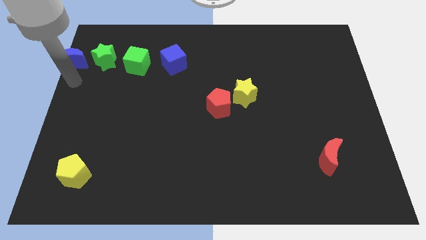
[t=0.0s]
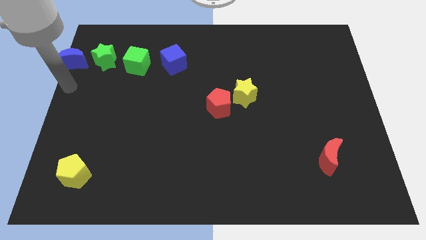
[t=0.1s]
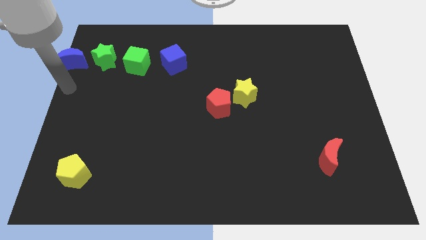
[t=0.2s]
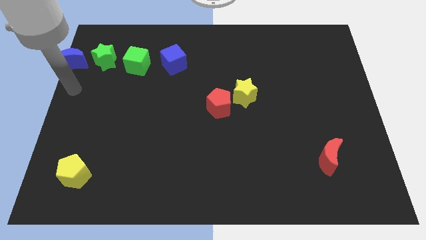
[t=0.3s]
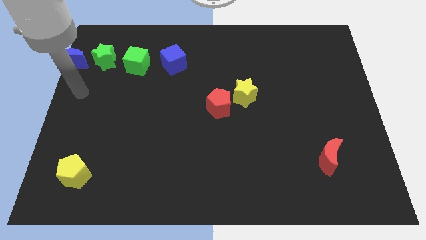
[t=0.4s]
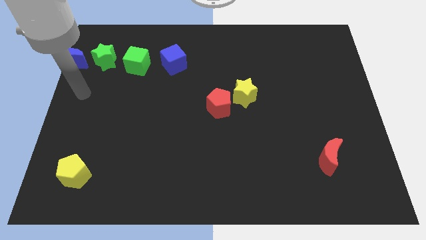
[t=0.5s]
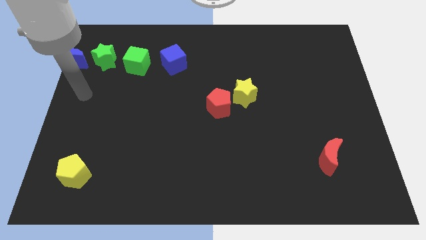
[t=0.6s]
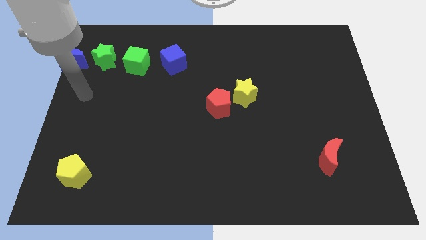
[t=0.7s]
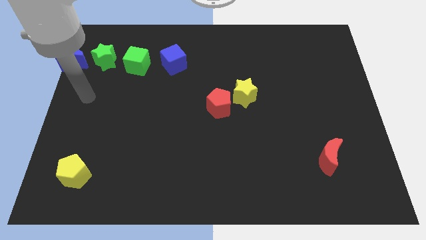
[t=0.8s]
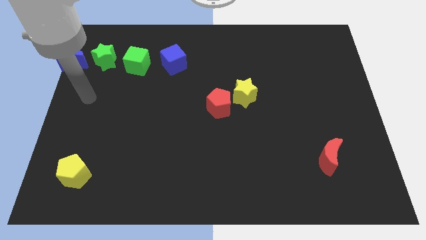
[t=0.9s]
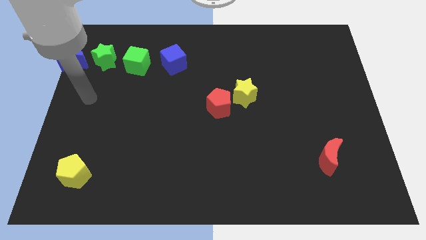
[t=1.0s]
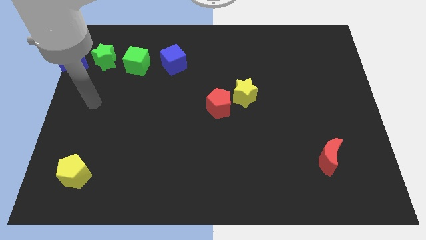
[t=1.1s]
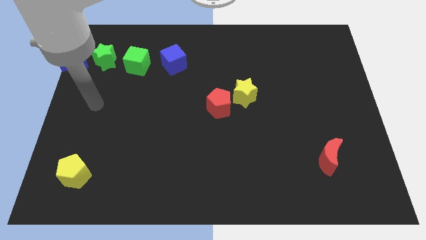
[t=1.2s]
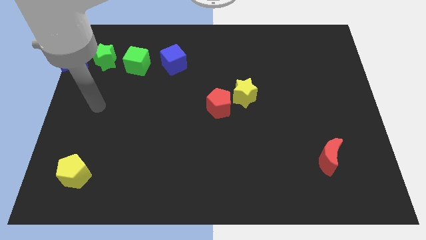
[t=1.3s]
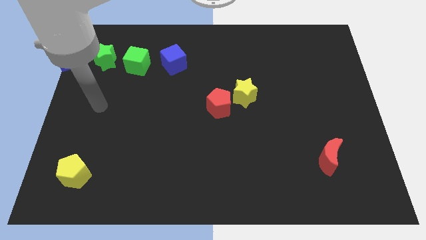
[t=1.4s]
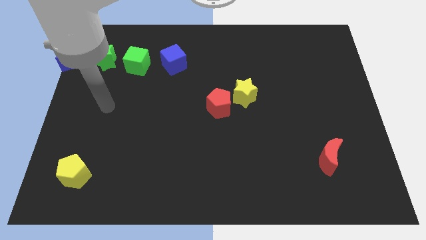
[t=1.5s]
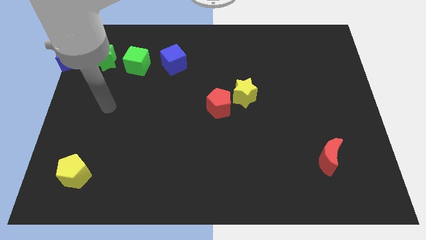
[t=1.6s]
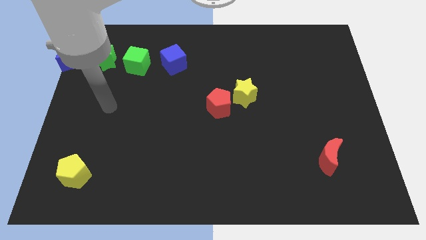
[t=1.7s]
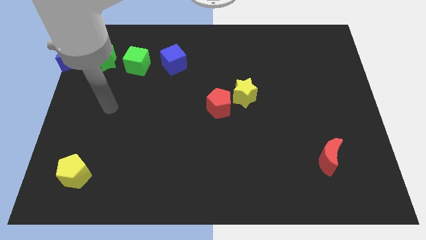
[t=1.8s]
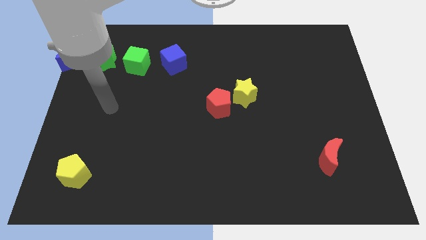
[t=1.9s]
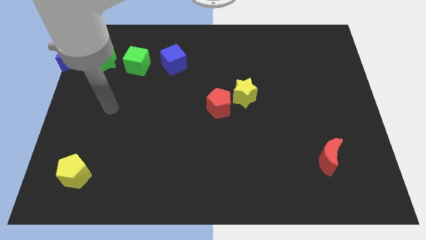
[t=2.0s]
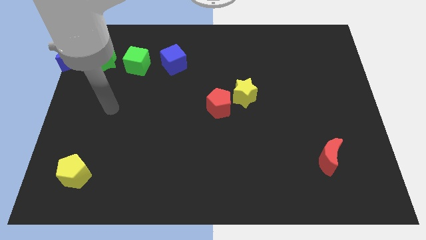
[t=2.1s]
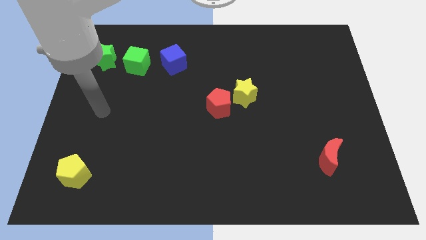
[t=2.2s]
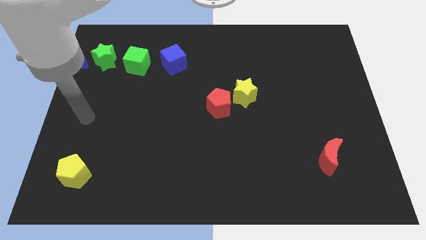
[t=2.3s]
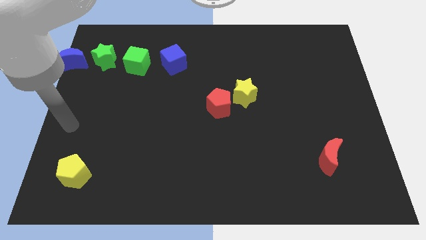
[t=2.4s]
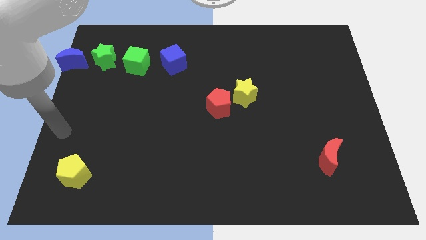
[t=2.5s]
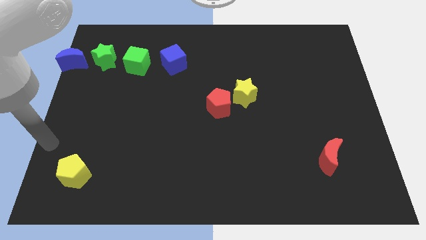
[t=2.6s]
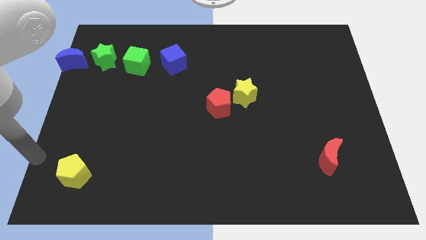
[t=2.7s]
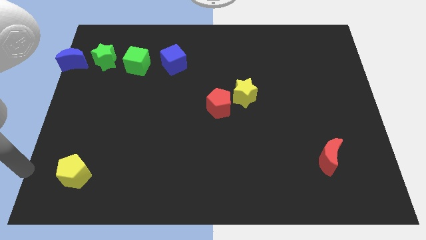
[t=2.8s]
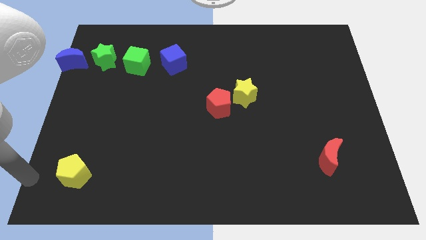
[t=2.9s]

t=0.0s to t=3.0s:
move your arm towards the yellow pentagon

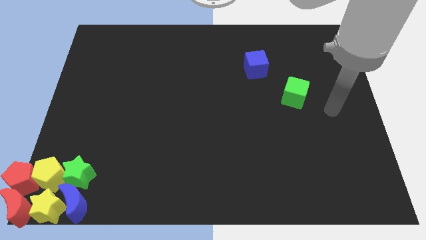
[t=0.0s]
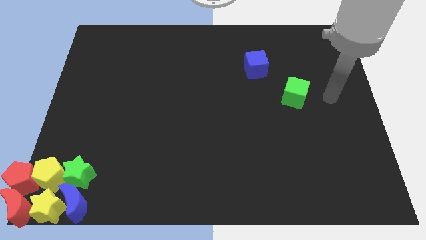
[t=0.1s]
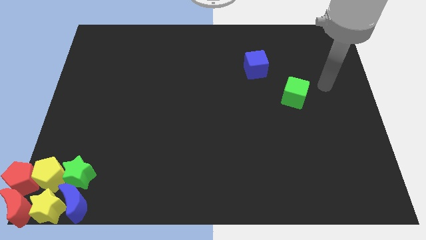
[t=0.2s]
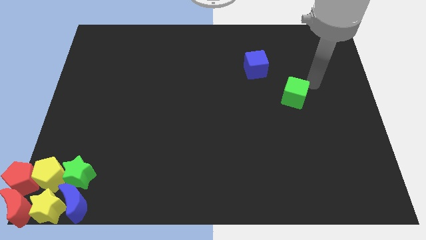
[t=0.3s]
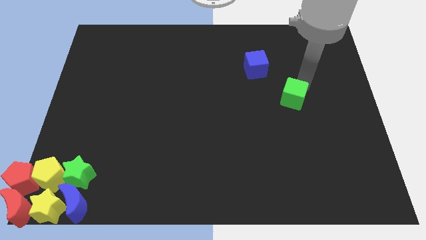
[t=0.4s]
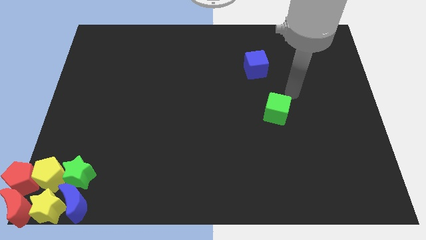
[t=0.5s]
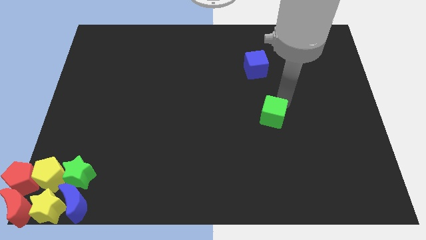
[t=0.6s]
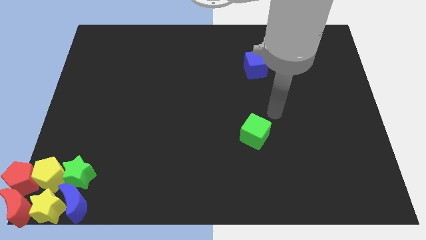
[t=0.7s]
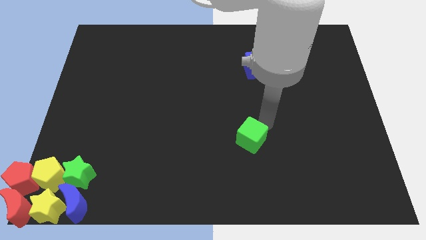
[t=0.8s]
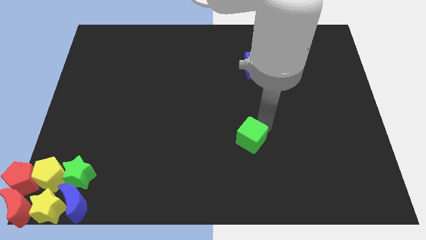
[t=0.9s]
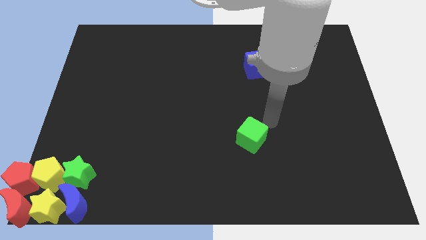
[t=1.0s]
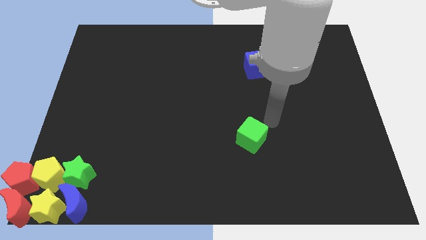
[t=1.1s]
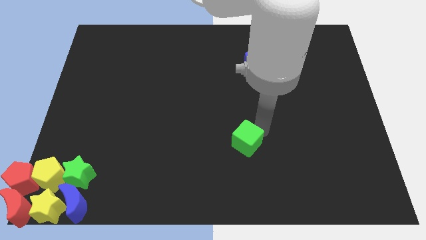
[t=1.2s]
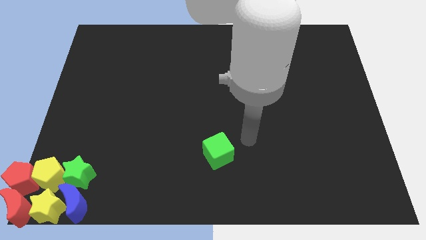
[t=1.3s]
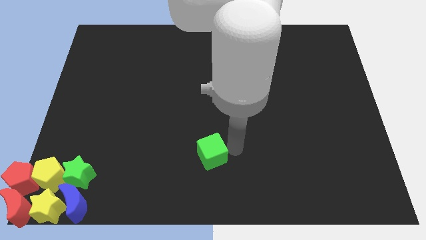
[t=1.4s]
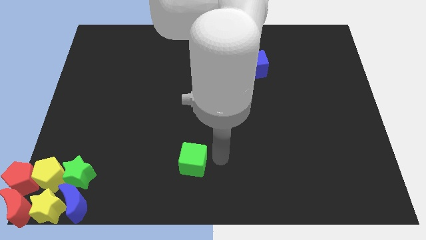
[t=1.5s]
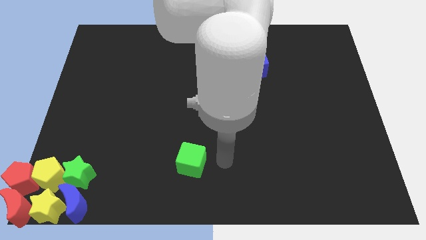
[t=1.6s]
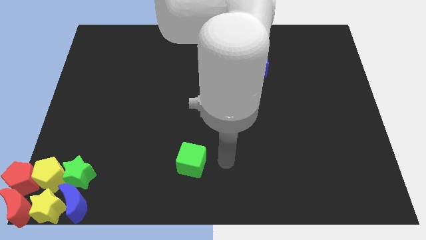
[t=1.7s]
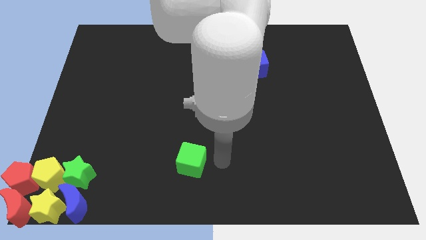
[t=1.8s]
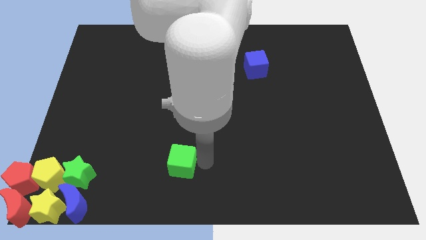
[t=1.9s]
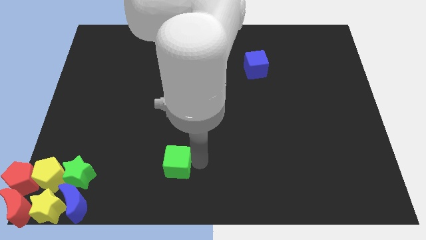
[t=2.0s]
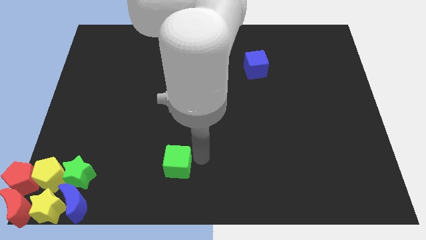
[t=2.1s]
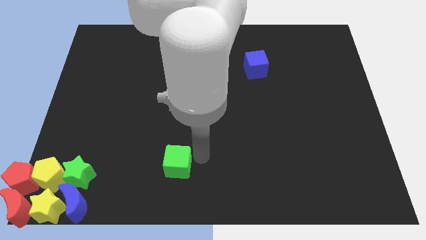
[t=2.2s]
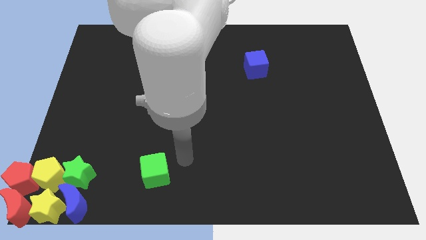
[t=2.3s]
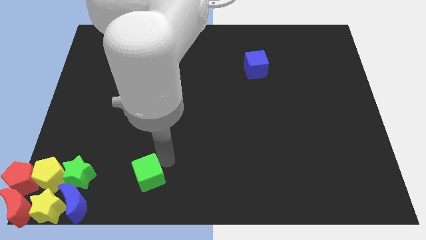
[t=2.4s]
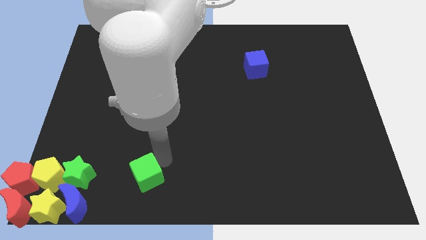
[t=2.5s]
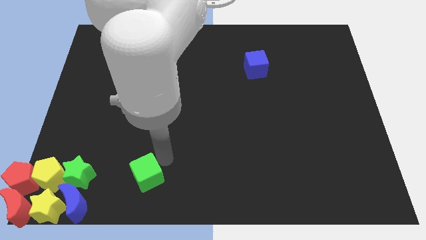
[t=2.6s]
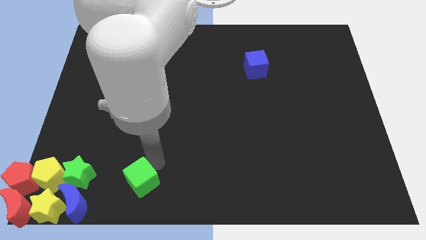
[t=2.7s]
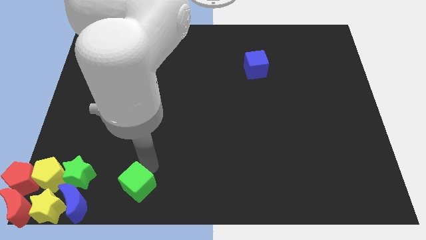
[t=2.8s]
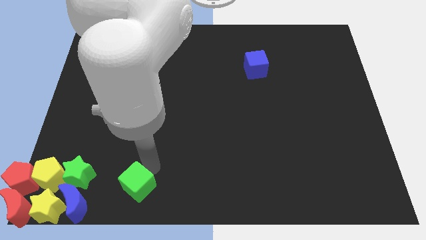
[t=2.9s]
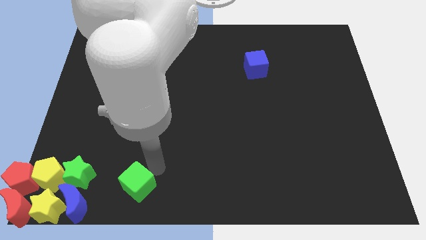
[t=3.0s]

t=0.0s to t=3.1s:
move green cube parallel to green star

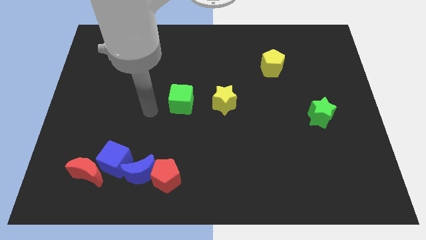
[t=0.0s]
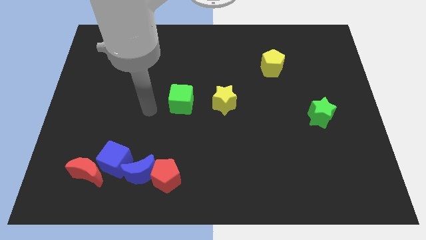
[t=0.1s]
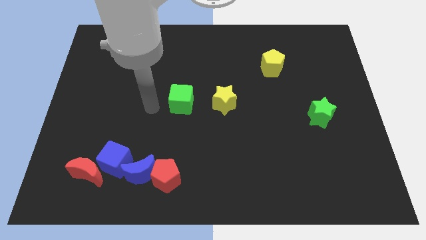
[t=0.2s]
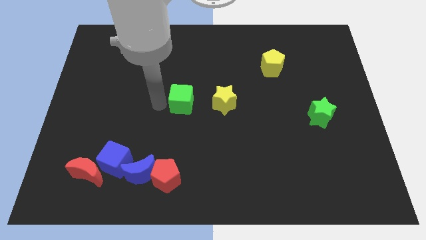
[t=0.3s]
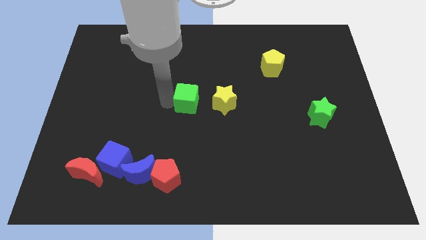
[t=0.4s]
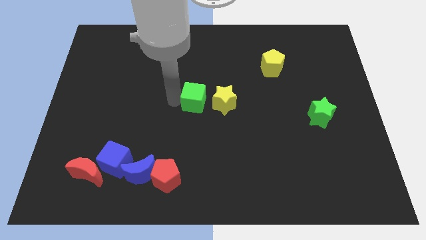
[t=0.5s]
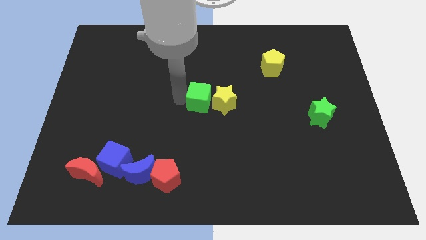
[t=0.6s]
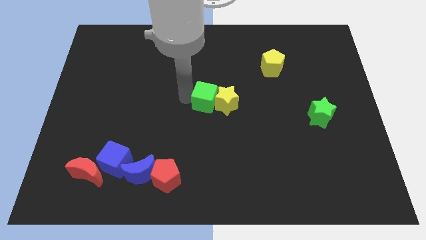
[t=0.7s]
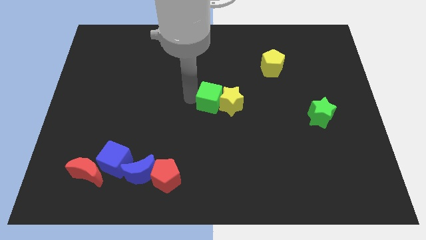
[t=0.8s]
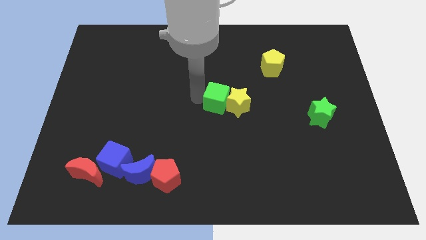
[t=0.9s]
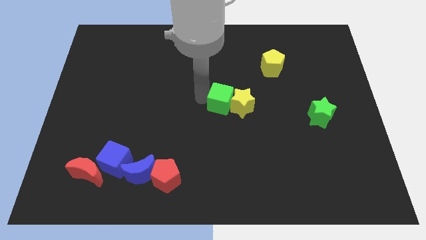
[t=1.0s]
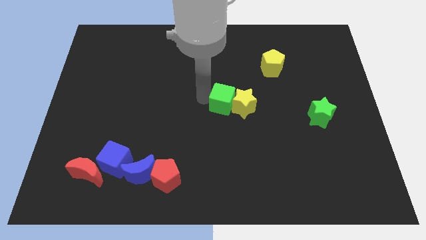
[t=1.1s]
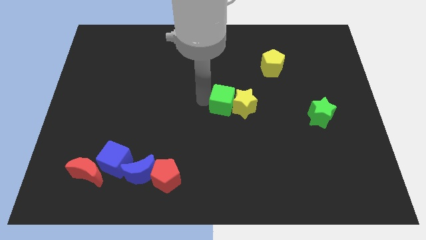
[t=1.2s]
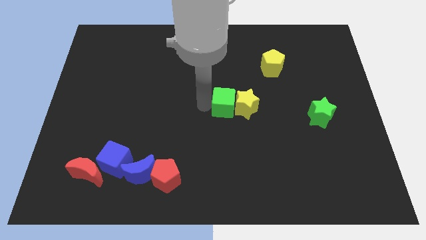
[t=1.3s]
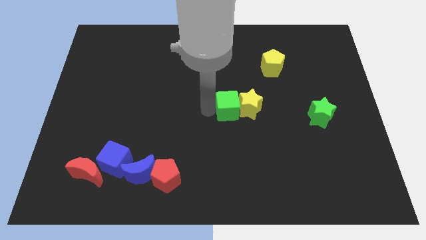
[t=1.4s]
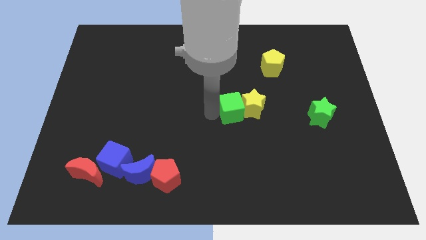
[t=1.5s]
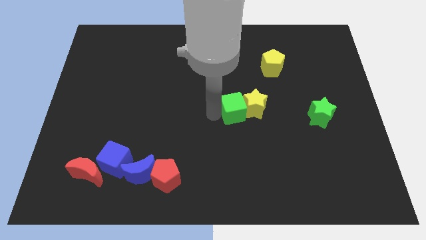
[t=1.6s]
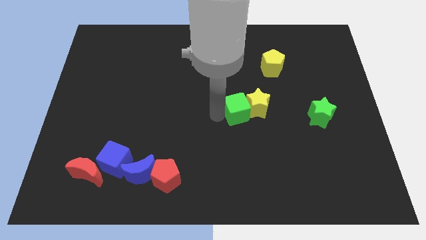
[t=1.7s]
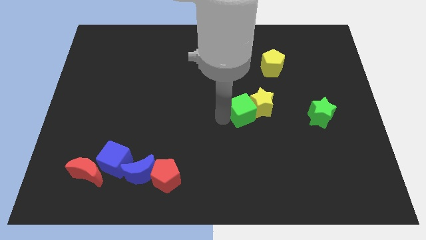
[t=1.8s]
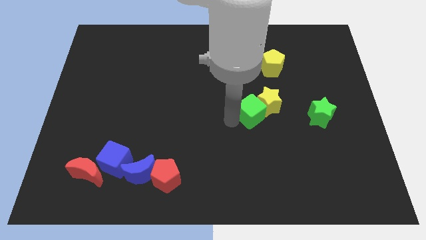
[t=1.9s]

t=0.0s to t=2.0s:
slide the green cube and yellow star to the right

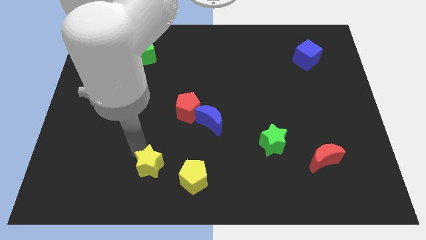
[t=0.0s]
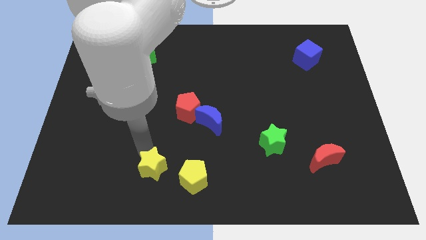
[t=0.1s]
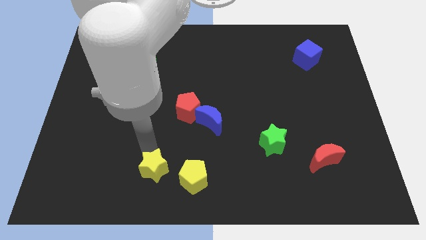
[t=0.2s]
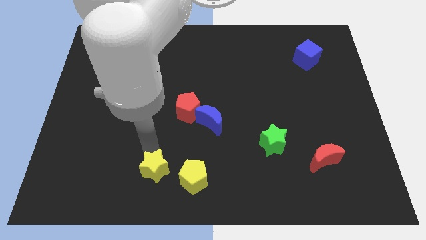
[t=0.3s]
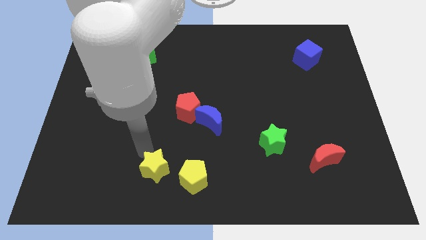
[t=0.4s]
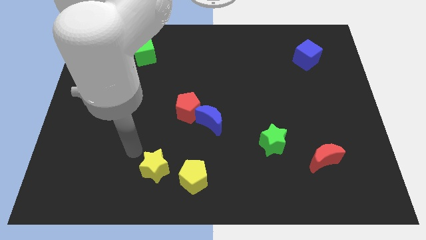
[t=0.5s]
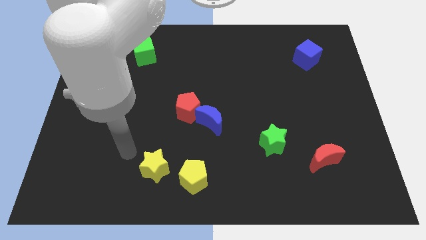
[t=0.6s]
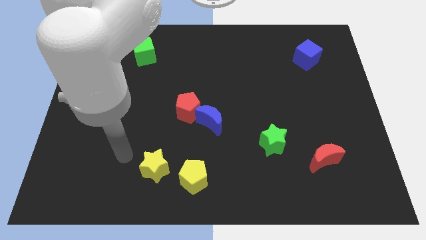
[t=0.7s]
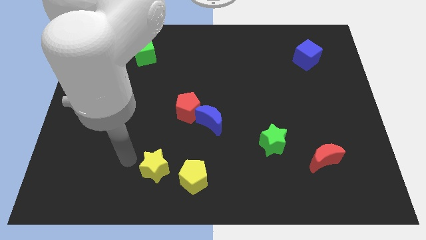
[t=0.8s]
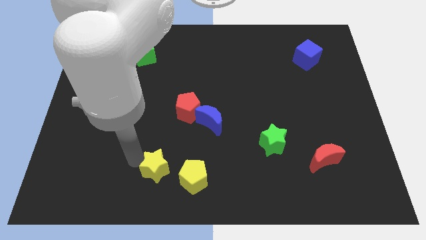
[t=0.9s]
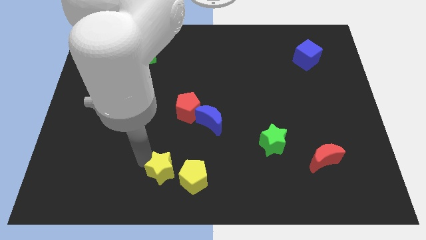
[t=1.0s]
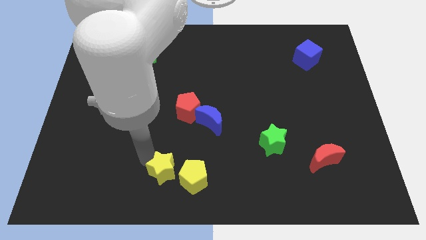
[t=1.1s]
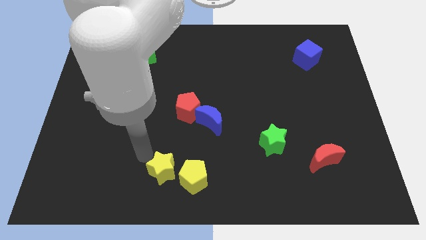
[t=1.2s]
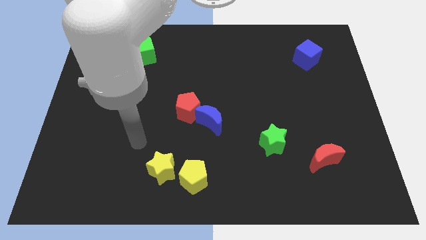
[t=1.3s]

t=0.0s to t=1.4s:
move the yellow star close to the yellow pentagon
